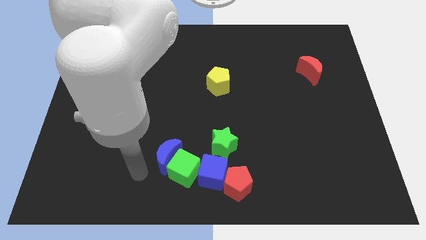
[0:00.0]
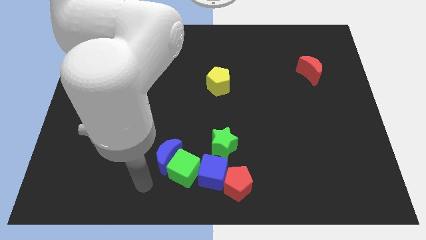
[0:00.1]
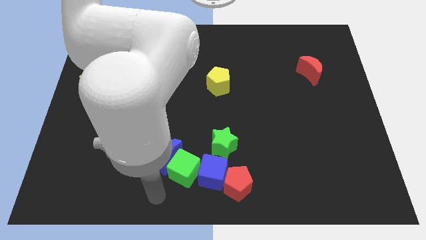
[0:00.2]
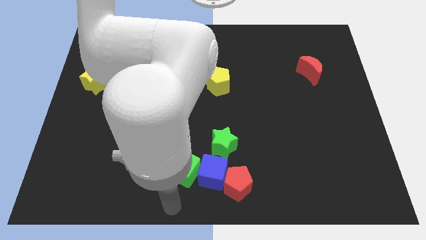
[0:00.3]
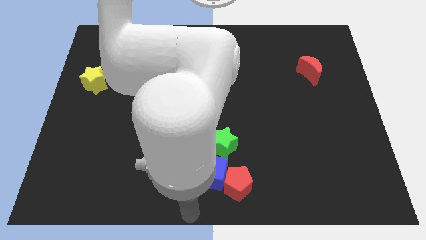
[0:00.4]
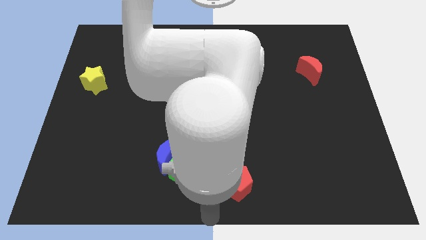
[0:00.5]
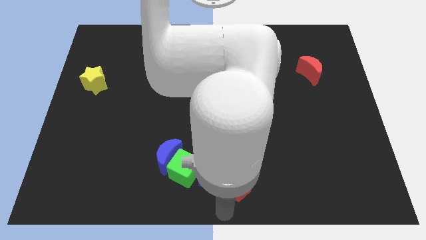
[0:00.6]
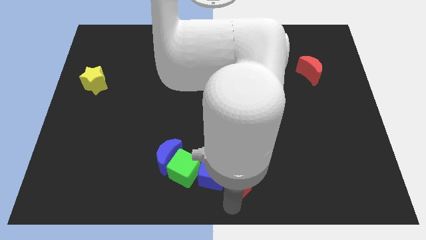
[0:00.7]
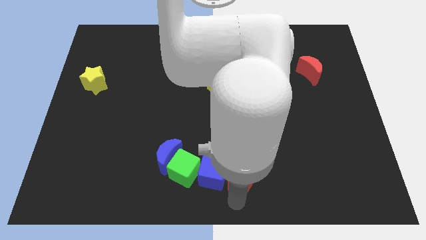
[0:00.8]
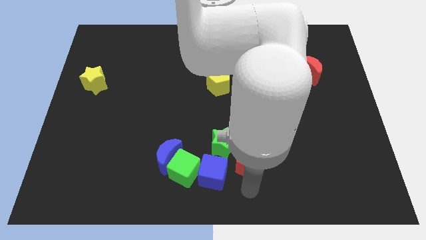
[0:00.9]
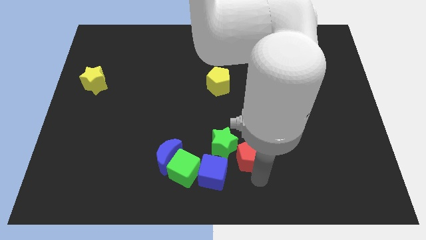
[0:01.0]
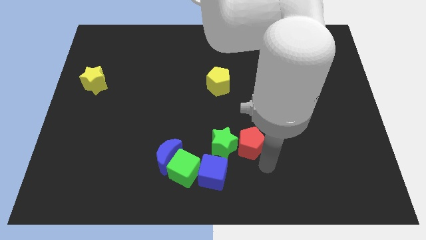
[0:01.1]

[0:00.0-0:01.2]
separate the red pentagon from the blue cube

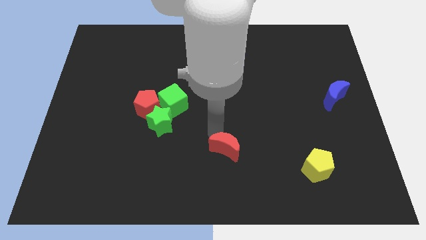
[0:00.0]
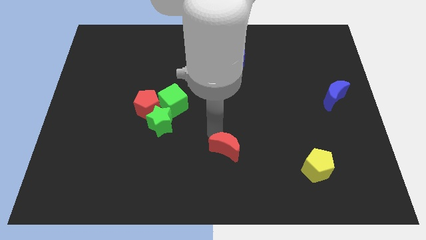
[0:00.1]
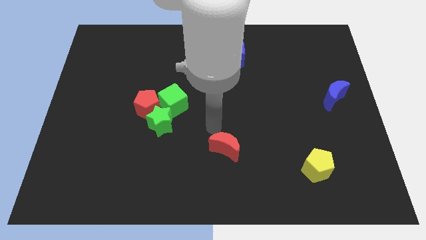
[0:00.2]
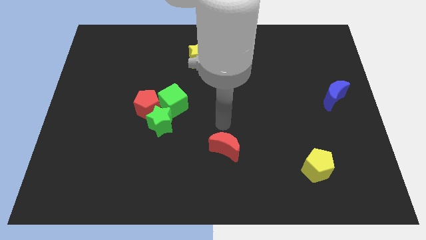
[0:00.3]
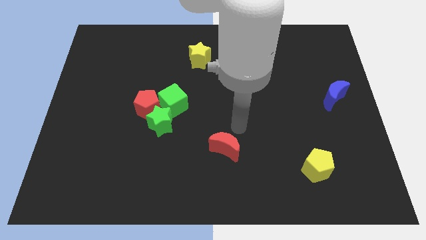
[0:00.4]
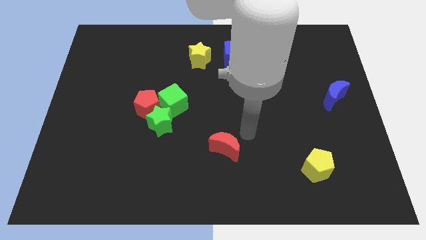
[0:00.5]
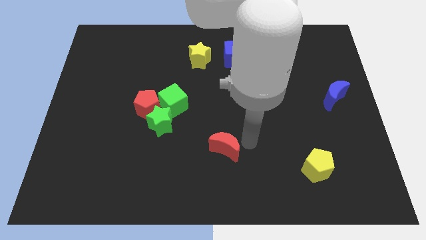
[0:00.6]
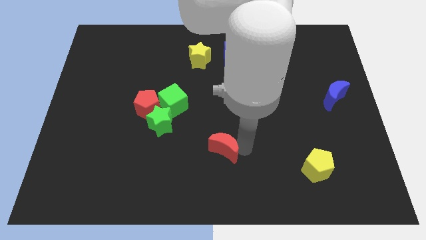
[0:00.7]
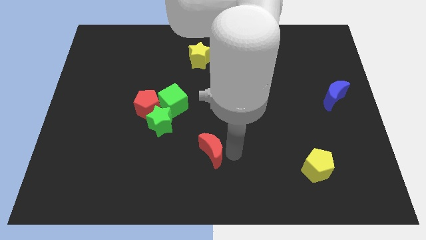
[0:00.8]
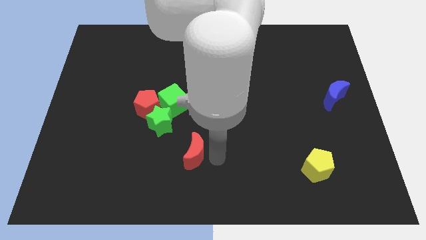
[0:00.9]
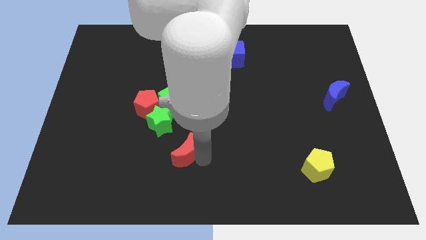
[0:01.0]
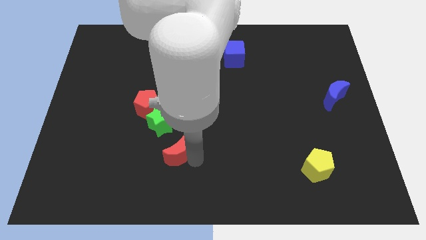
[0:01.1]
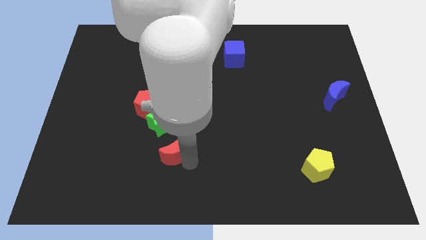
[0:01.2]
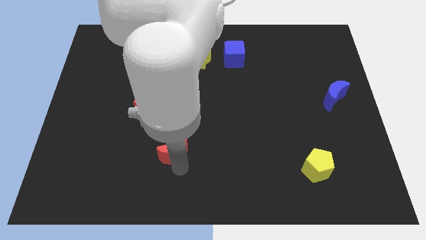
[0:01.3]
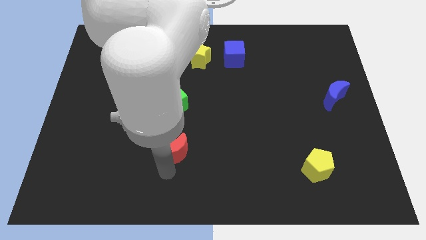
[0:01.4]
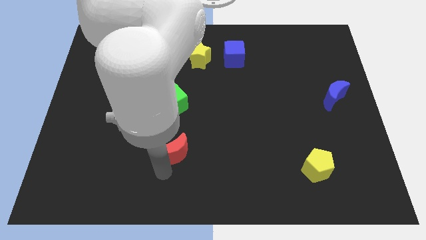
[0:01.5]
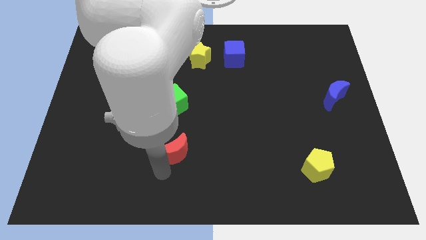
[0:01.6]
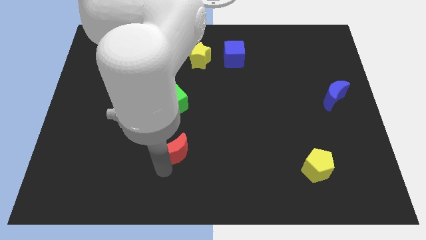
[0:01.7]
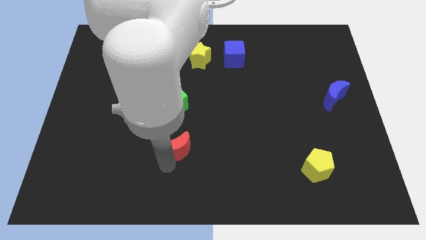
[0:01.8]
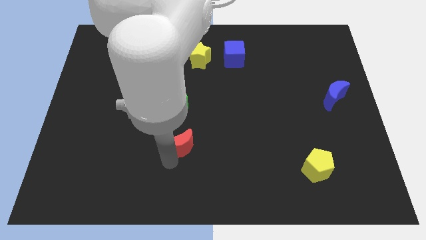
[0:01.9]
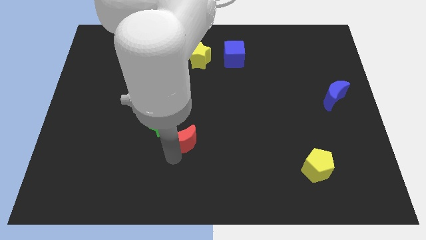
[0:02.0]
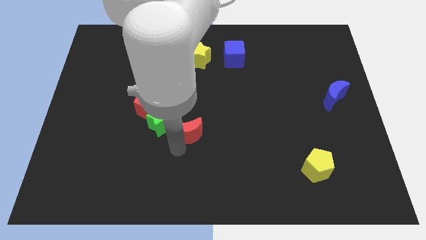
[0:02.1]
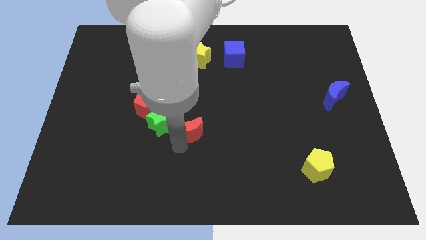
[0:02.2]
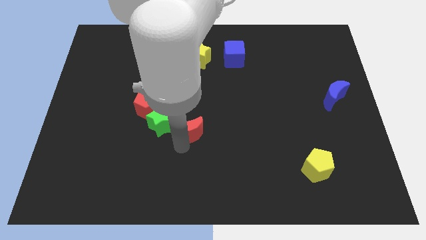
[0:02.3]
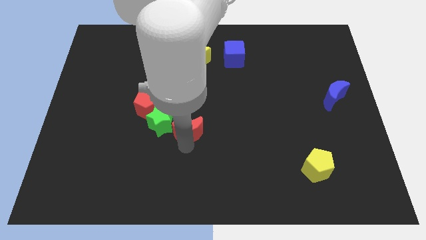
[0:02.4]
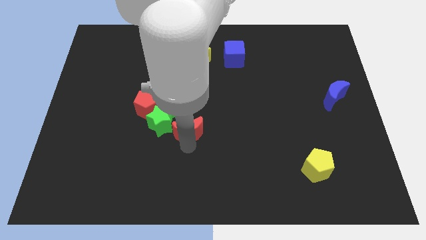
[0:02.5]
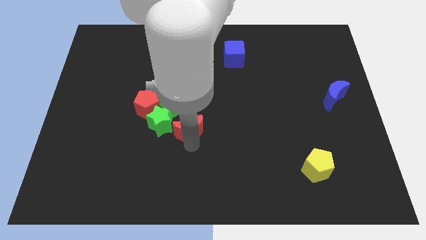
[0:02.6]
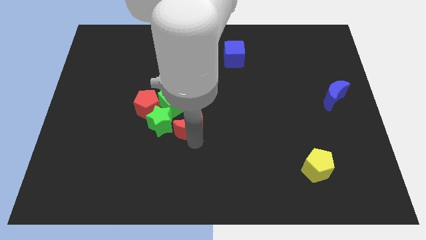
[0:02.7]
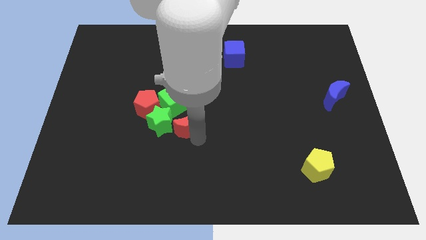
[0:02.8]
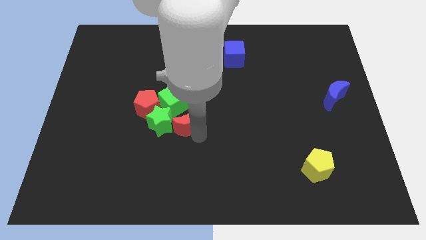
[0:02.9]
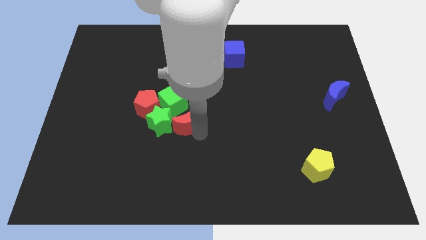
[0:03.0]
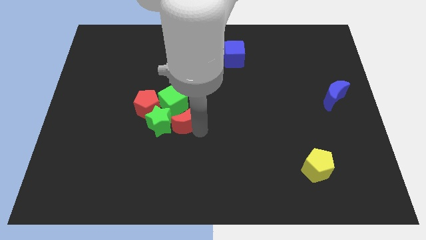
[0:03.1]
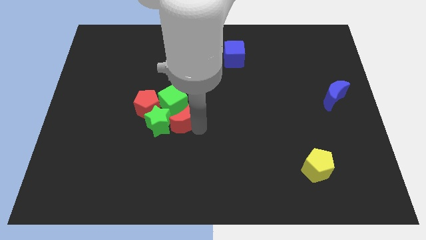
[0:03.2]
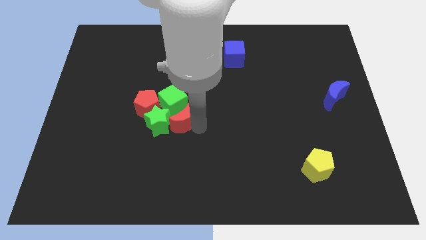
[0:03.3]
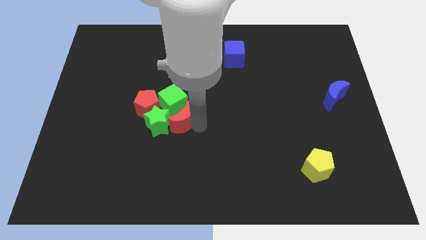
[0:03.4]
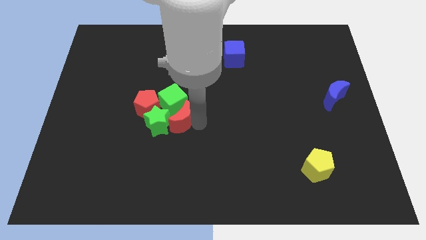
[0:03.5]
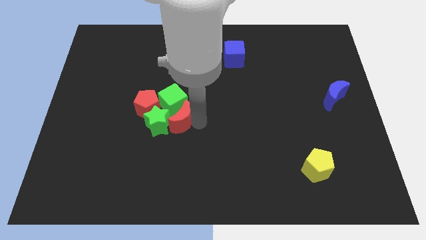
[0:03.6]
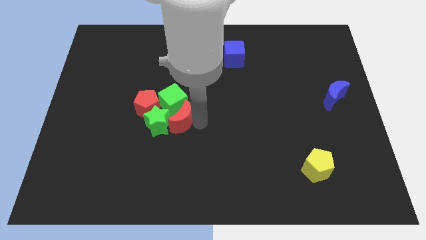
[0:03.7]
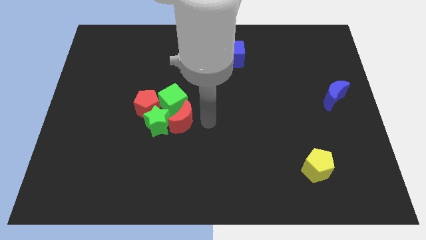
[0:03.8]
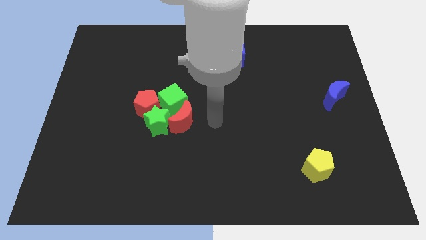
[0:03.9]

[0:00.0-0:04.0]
push the red moon into the group of blocks

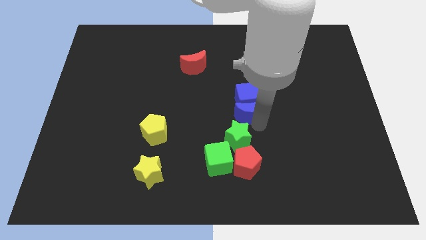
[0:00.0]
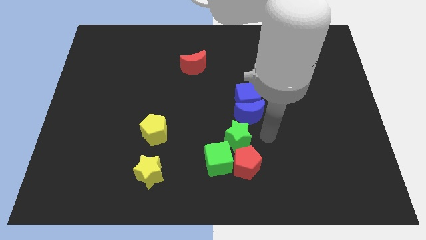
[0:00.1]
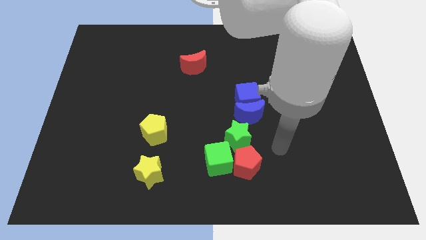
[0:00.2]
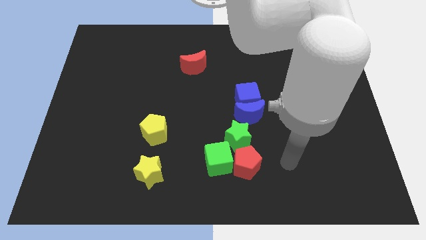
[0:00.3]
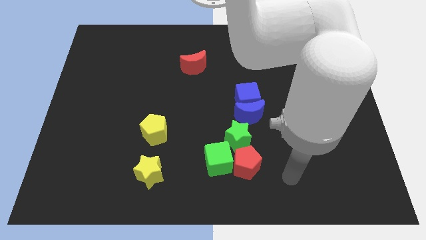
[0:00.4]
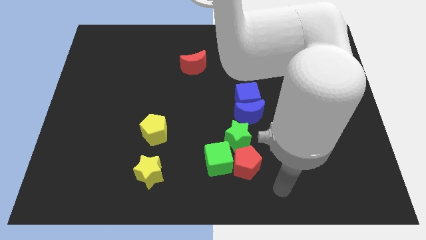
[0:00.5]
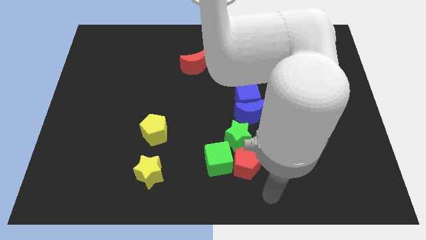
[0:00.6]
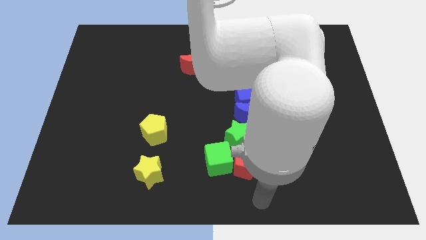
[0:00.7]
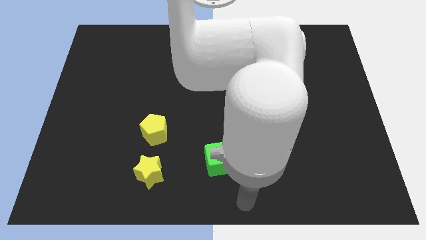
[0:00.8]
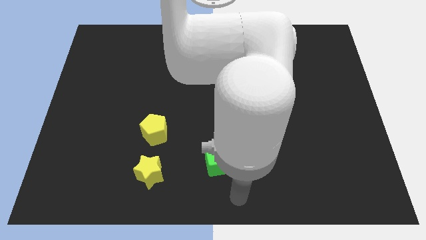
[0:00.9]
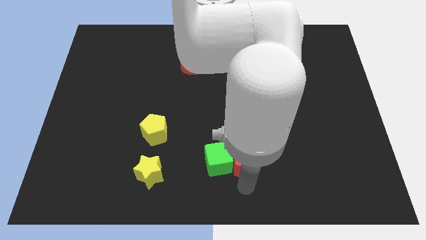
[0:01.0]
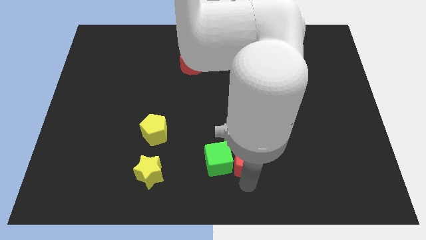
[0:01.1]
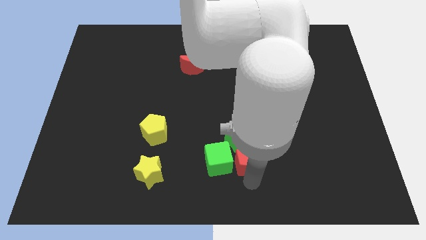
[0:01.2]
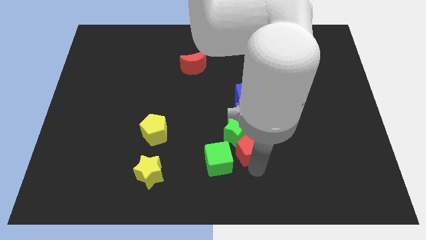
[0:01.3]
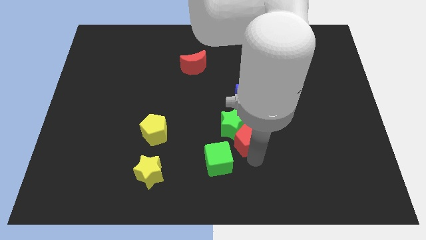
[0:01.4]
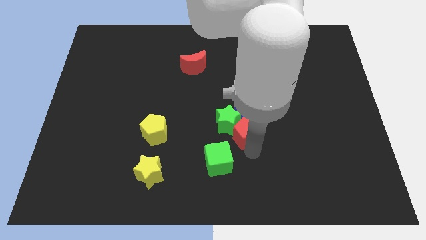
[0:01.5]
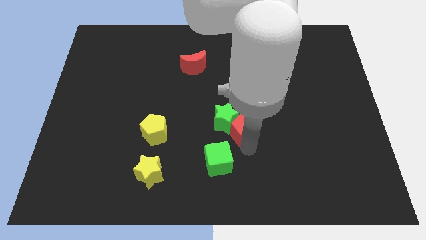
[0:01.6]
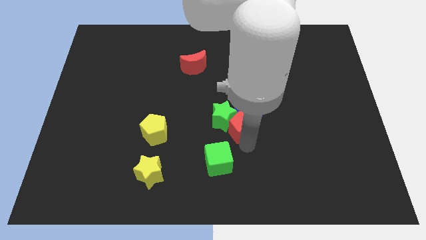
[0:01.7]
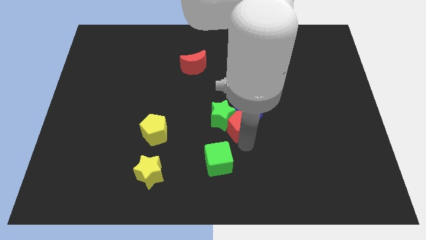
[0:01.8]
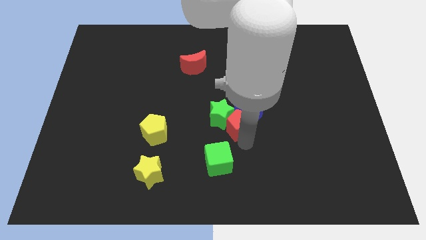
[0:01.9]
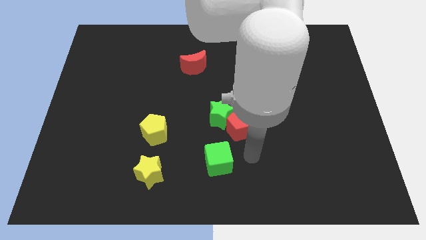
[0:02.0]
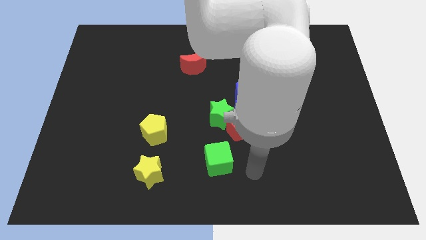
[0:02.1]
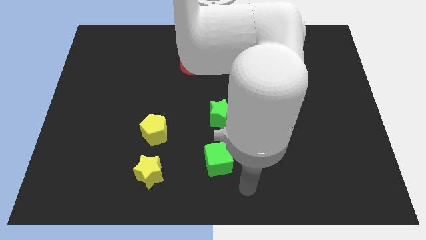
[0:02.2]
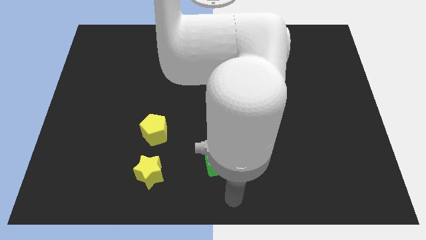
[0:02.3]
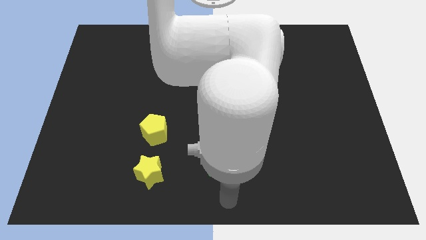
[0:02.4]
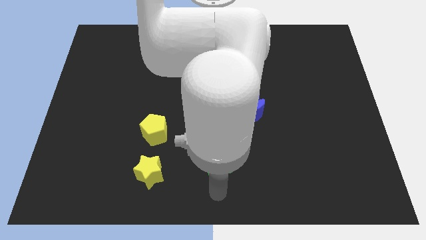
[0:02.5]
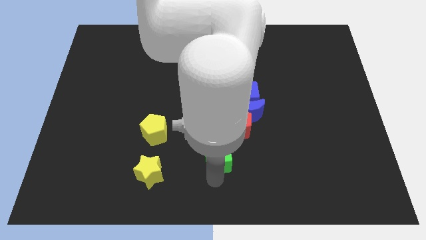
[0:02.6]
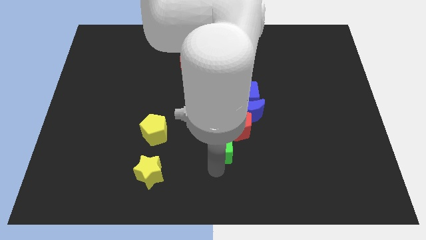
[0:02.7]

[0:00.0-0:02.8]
push the red pentagon into the green star

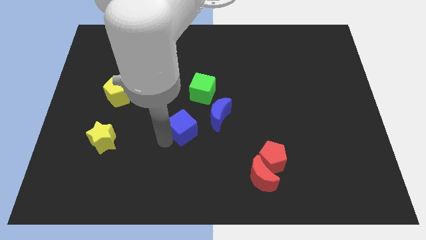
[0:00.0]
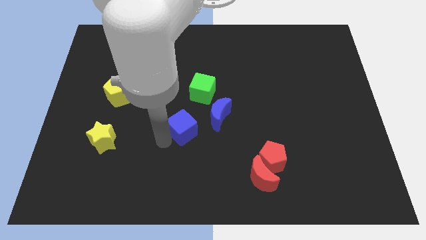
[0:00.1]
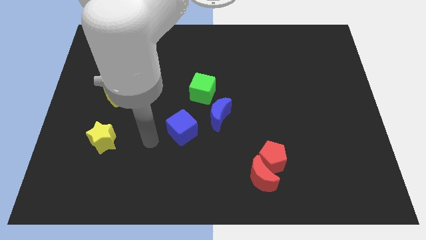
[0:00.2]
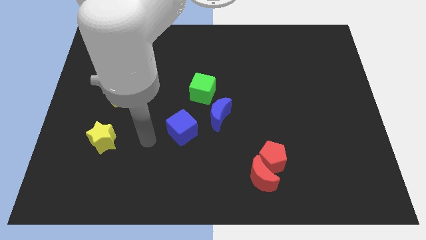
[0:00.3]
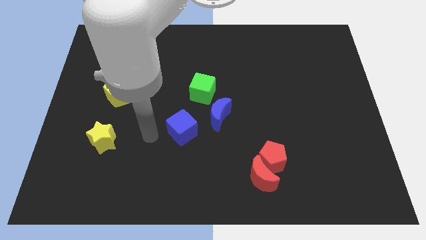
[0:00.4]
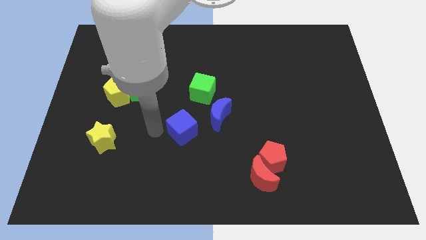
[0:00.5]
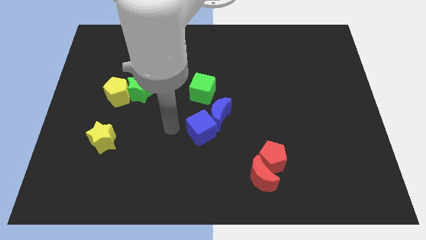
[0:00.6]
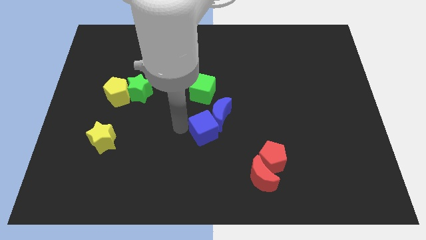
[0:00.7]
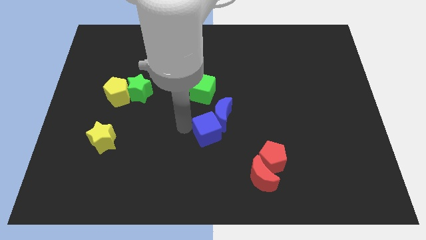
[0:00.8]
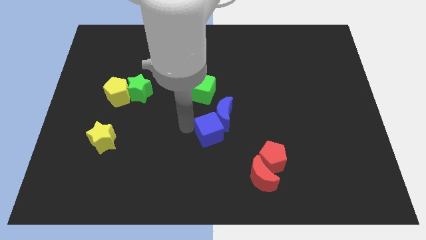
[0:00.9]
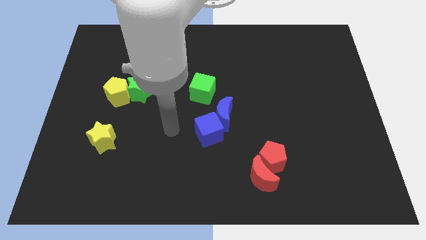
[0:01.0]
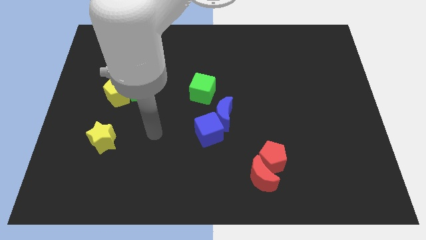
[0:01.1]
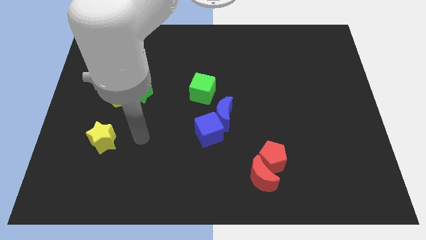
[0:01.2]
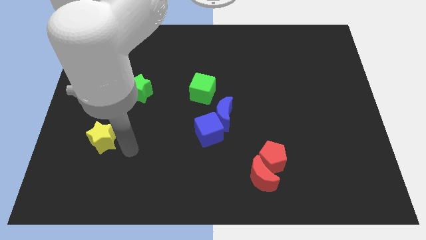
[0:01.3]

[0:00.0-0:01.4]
push the blue cube into the blue crescent
